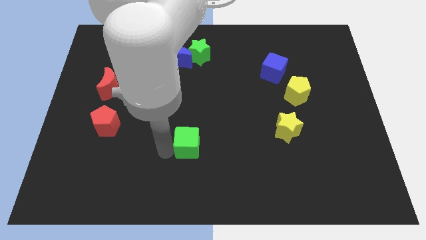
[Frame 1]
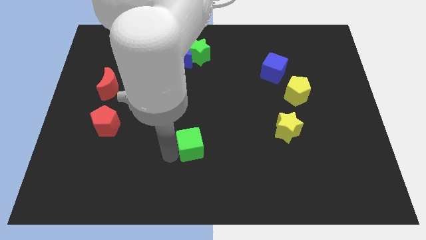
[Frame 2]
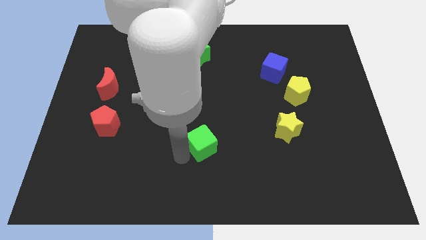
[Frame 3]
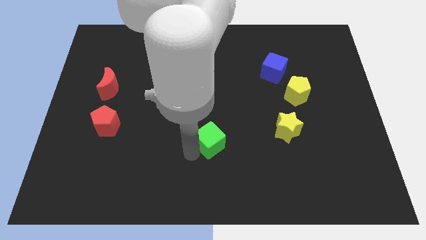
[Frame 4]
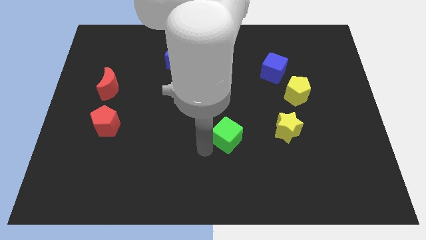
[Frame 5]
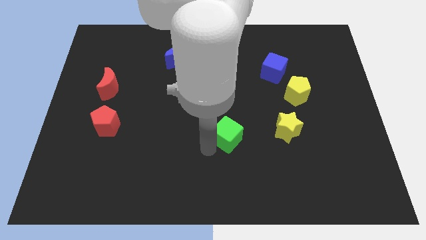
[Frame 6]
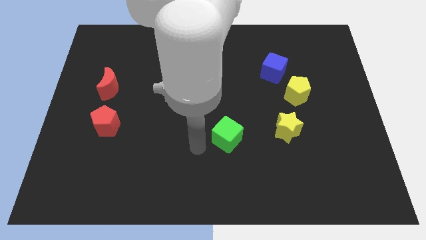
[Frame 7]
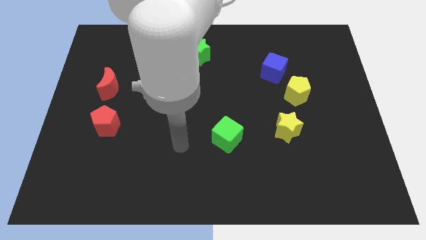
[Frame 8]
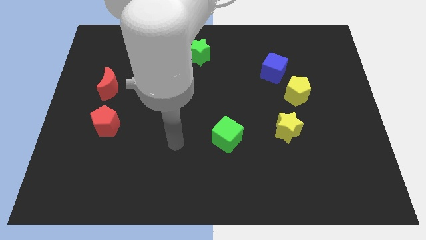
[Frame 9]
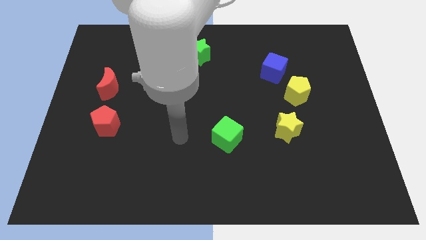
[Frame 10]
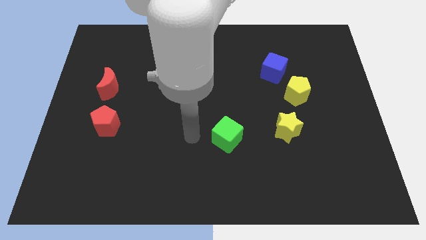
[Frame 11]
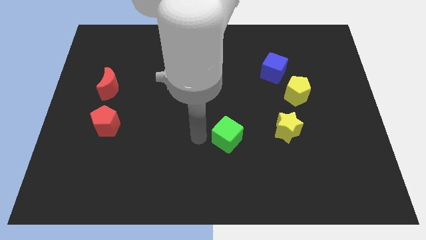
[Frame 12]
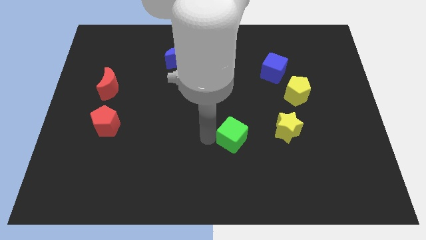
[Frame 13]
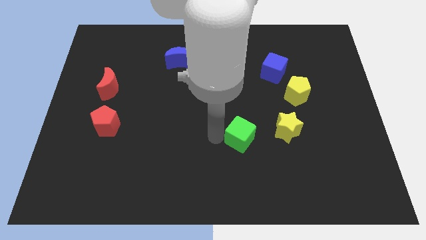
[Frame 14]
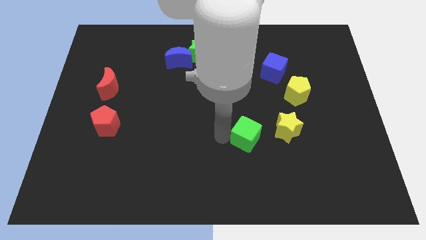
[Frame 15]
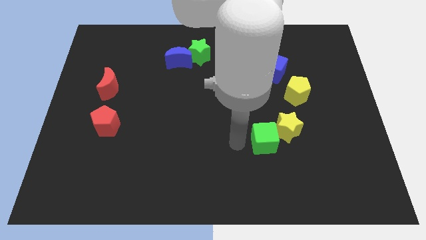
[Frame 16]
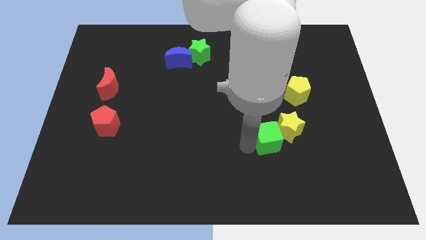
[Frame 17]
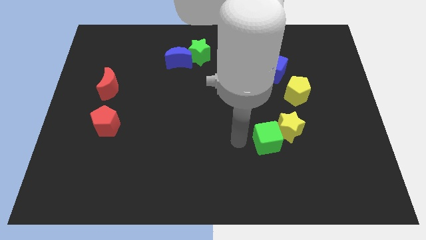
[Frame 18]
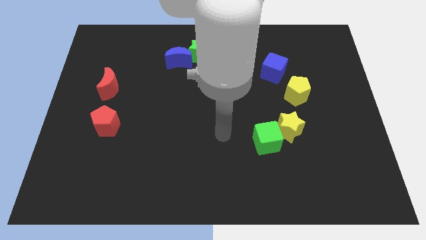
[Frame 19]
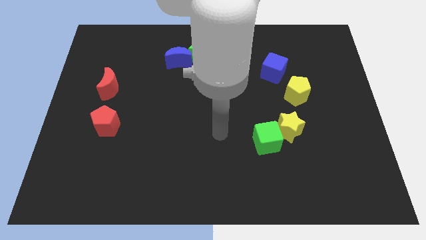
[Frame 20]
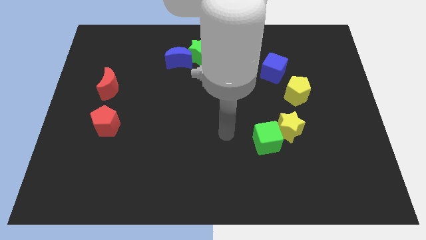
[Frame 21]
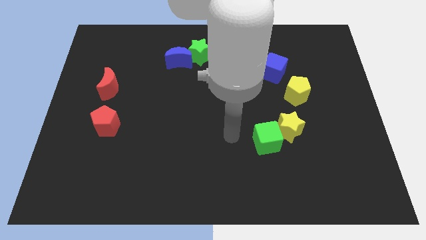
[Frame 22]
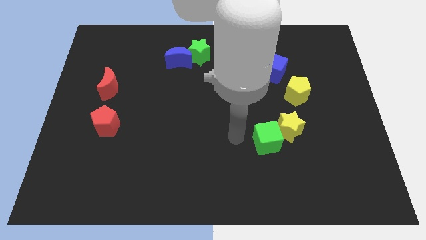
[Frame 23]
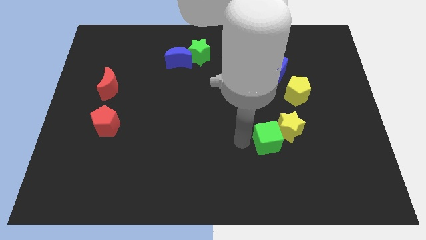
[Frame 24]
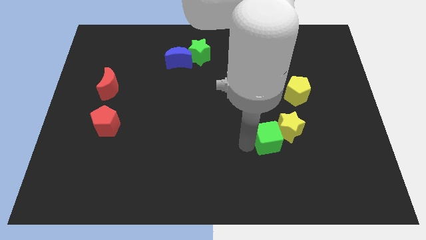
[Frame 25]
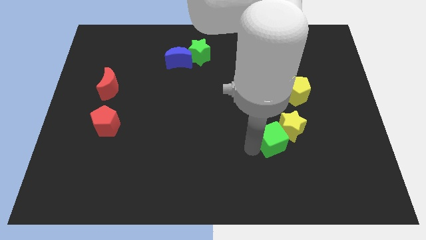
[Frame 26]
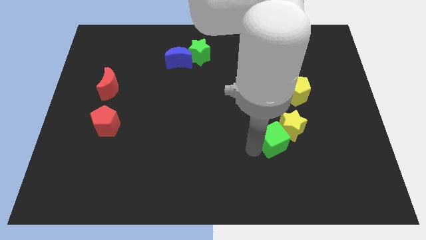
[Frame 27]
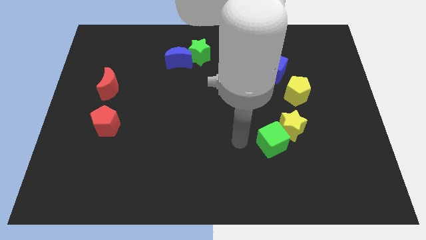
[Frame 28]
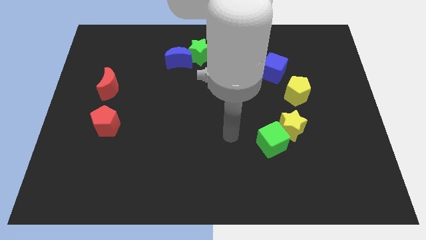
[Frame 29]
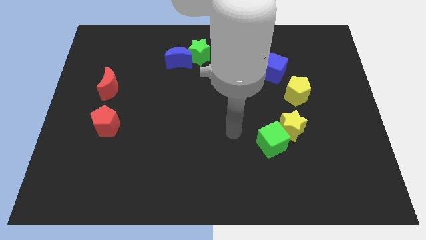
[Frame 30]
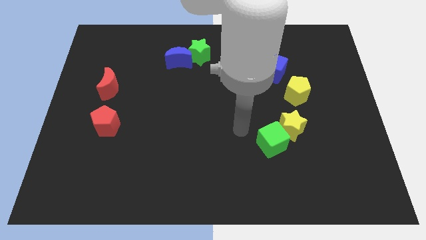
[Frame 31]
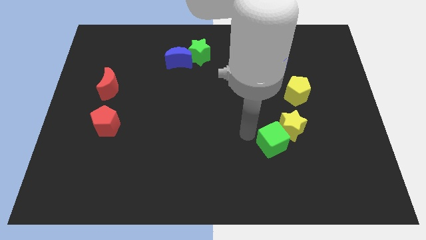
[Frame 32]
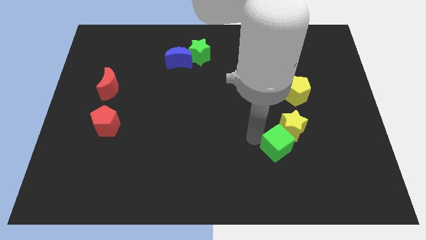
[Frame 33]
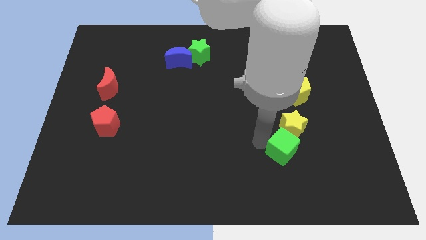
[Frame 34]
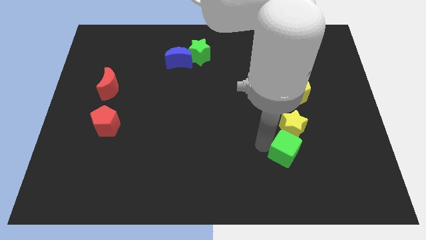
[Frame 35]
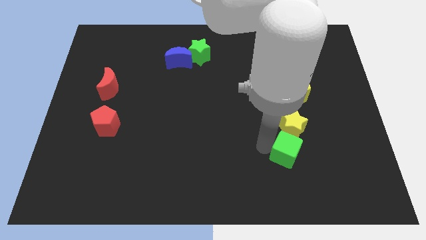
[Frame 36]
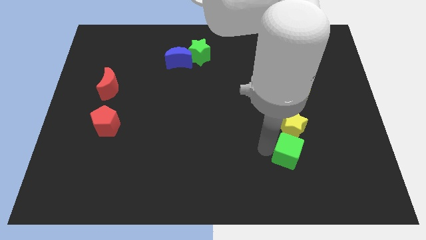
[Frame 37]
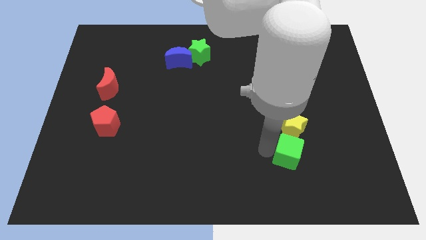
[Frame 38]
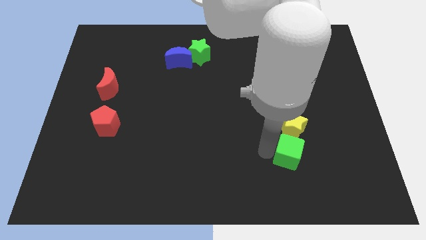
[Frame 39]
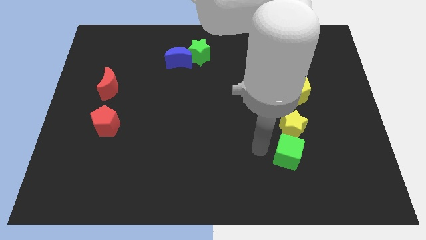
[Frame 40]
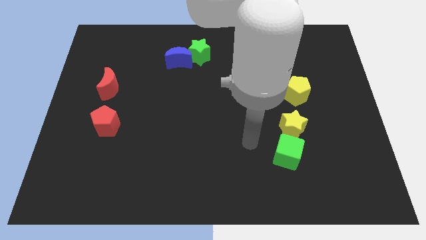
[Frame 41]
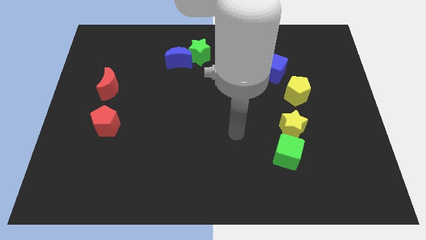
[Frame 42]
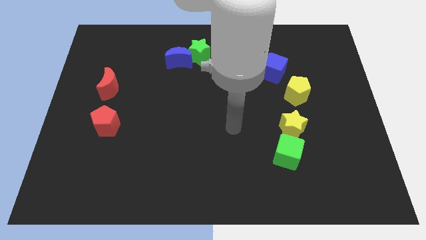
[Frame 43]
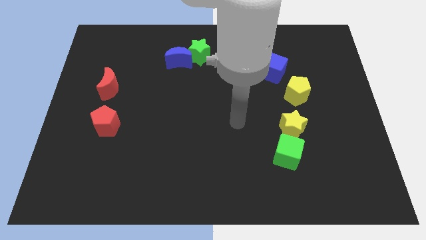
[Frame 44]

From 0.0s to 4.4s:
place the green cube diagonal to the red crescent

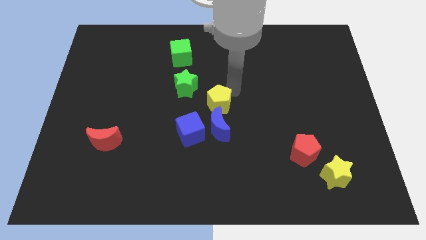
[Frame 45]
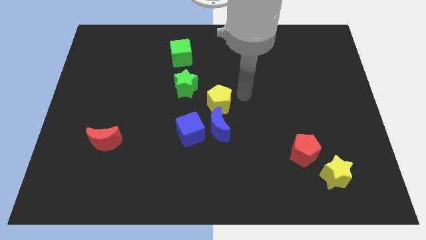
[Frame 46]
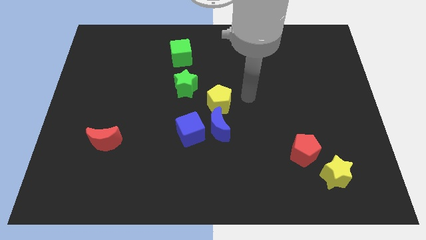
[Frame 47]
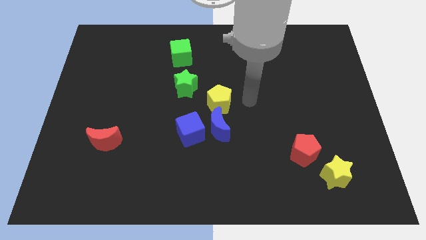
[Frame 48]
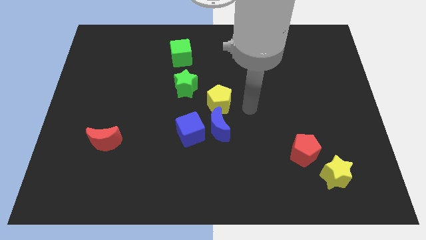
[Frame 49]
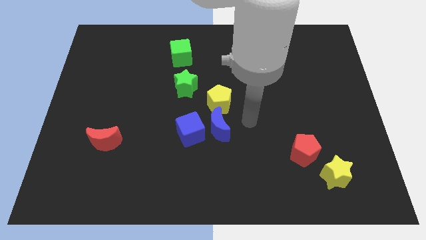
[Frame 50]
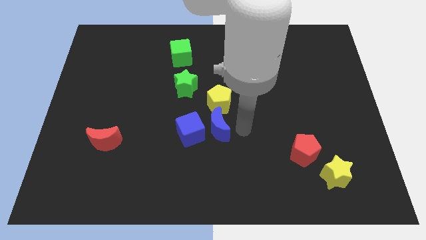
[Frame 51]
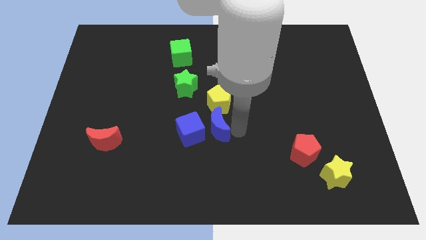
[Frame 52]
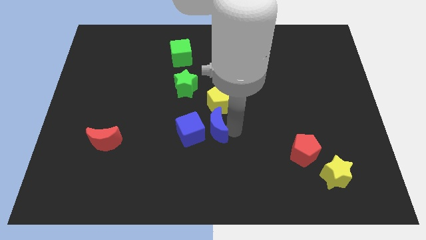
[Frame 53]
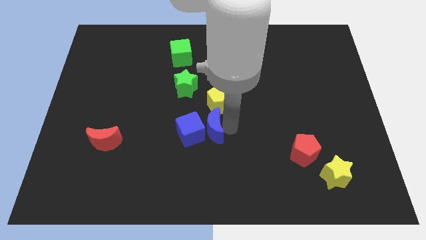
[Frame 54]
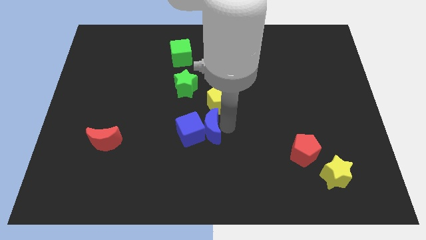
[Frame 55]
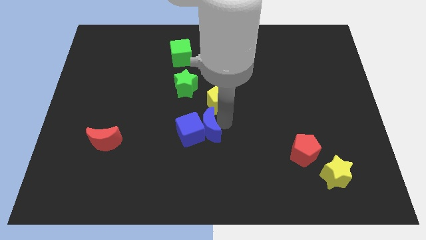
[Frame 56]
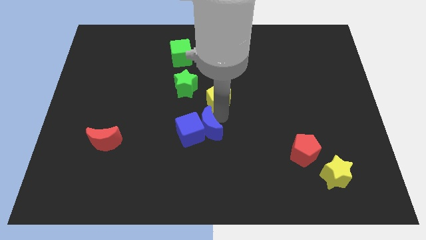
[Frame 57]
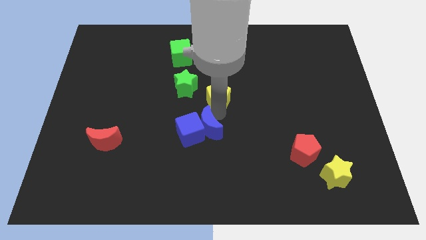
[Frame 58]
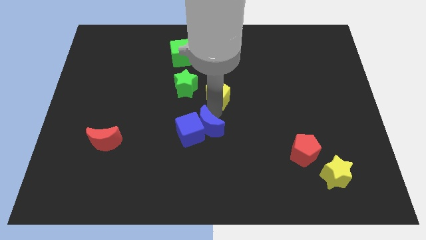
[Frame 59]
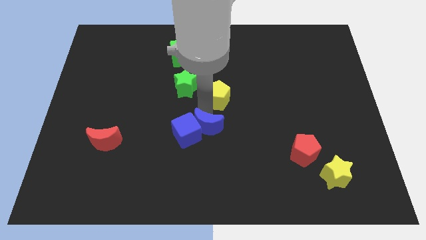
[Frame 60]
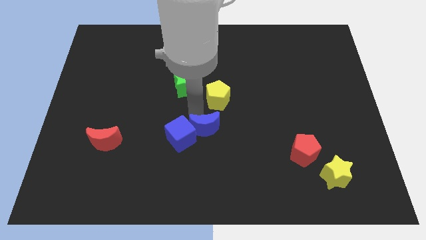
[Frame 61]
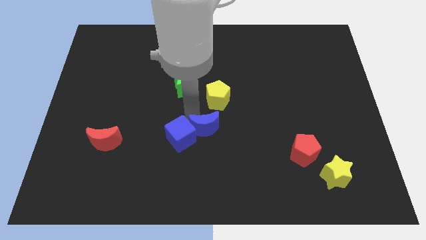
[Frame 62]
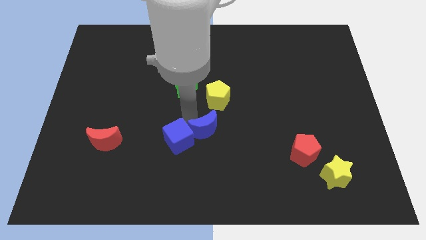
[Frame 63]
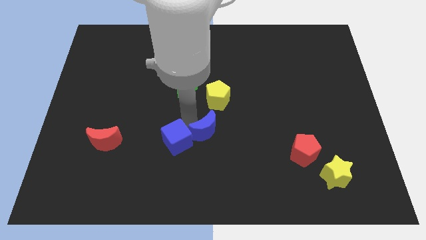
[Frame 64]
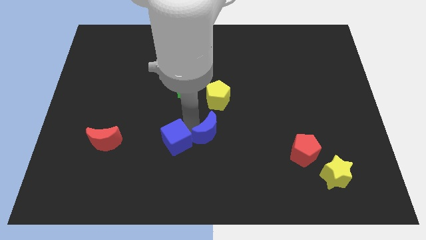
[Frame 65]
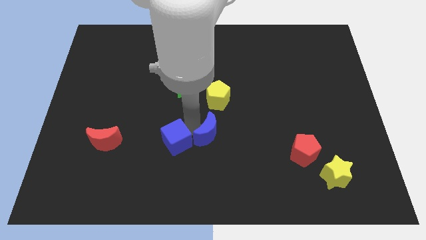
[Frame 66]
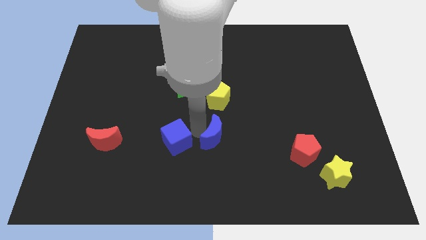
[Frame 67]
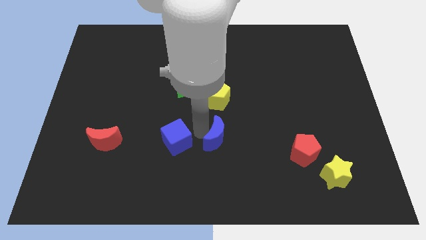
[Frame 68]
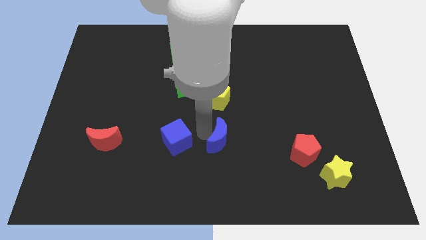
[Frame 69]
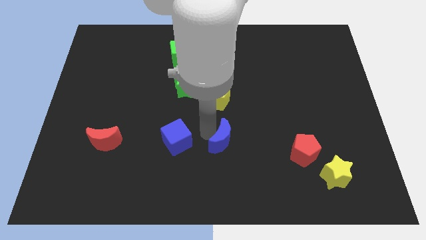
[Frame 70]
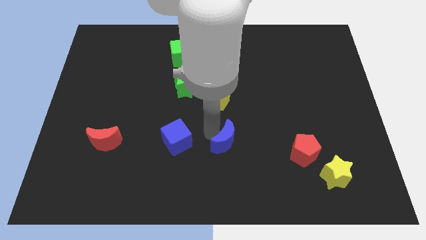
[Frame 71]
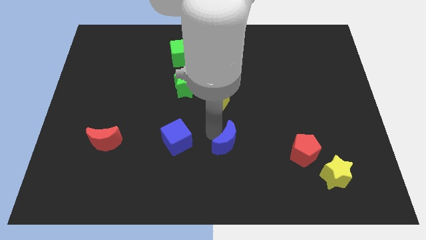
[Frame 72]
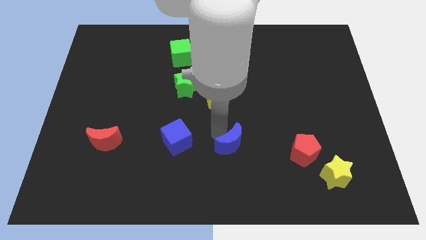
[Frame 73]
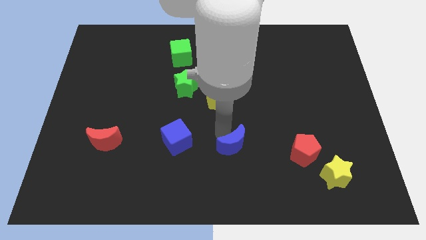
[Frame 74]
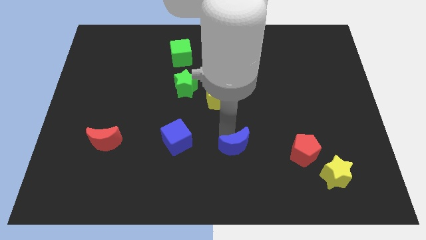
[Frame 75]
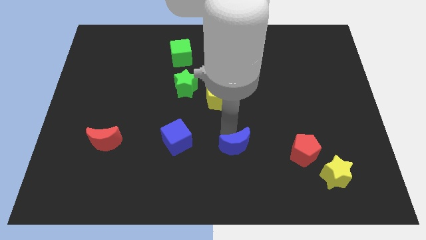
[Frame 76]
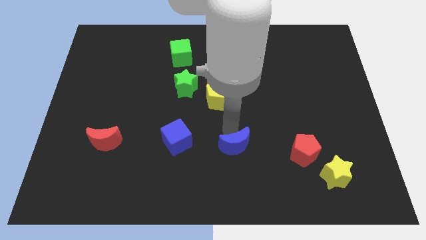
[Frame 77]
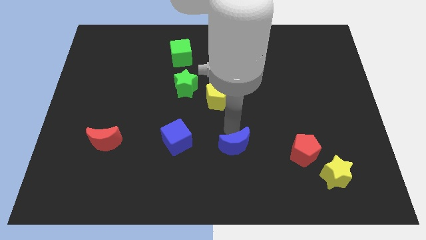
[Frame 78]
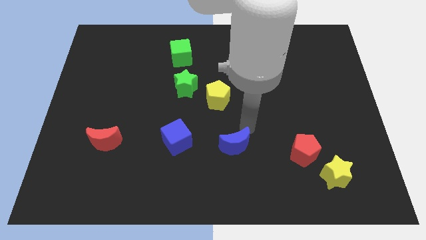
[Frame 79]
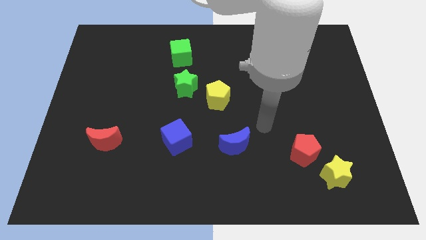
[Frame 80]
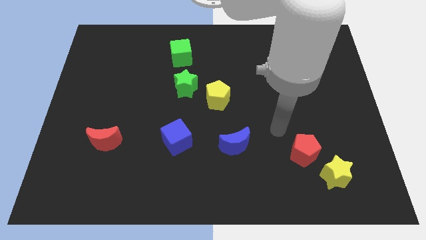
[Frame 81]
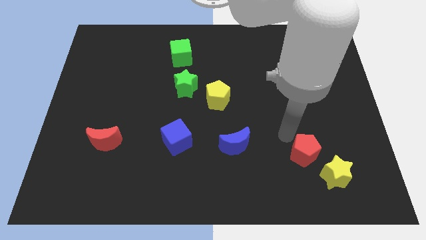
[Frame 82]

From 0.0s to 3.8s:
separate the blue crescent from the blue cube

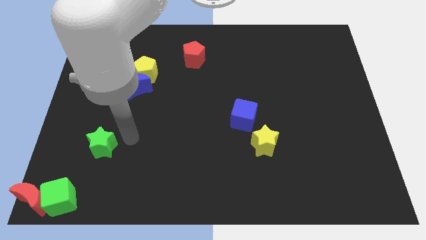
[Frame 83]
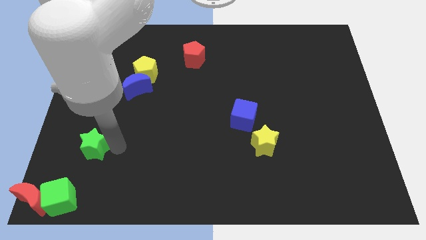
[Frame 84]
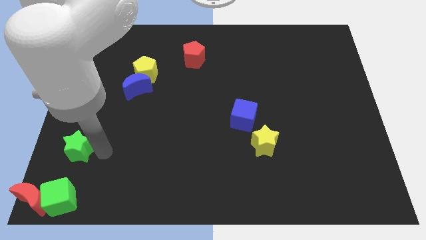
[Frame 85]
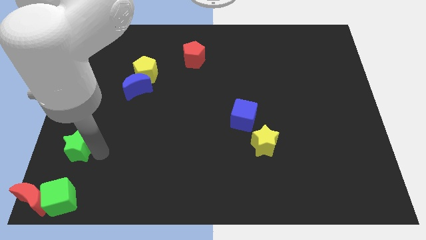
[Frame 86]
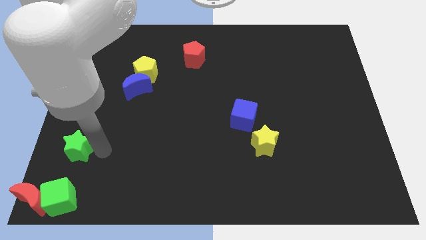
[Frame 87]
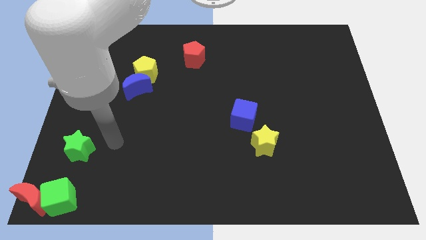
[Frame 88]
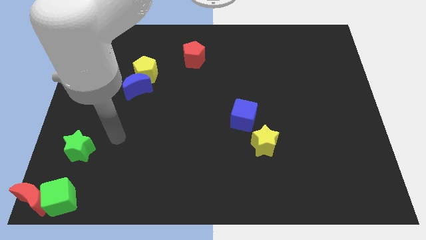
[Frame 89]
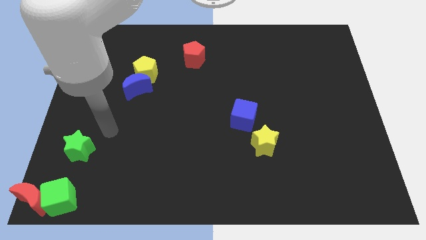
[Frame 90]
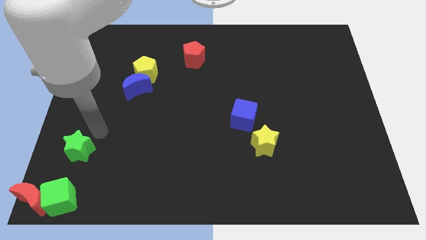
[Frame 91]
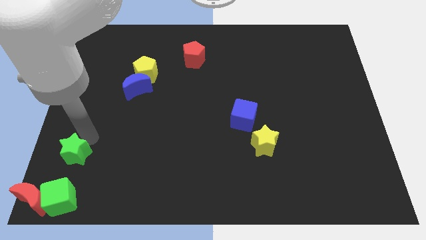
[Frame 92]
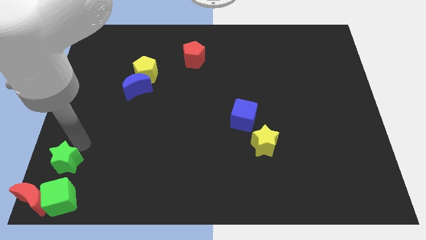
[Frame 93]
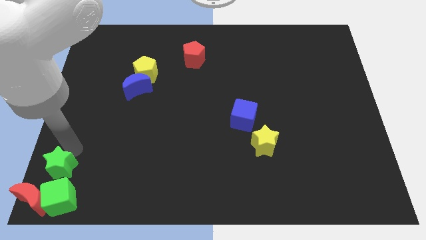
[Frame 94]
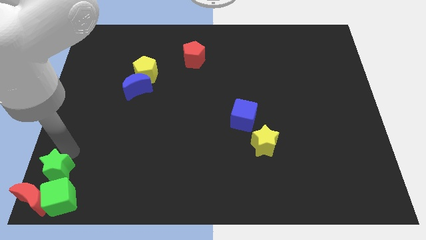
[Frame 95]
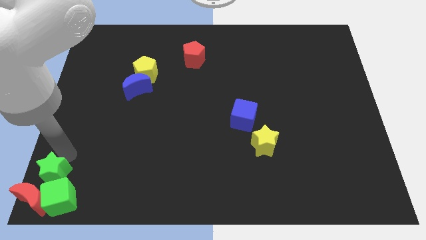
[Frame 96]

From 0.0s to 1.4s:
place the green star above the green cube
